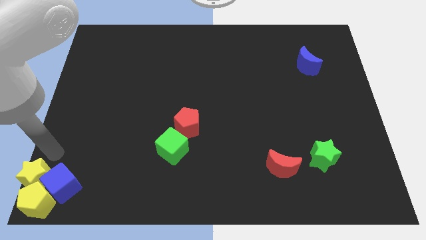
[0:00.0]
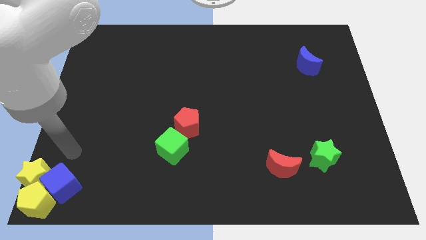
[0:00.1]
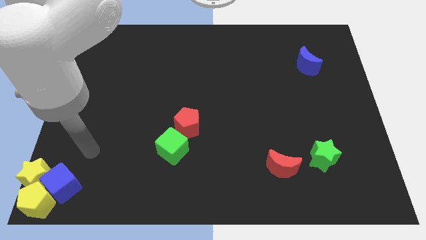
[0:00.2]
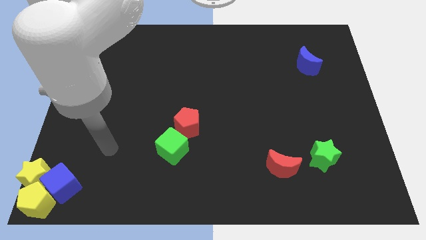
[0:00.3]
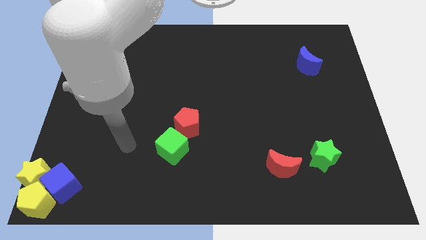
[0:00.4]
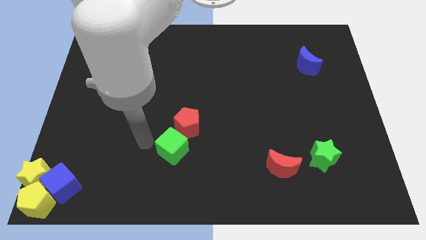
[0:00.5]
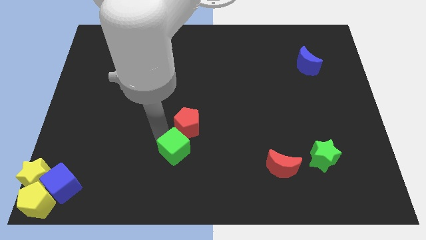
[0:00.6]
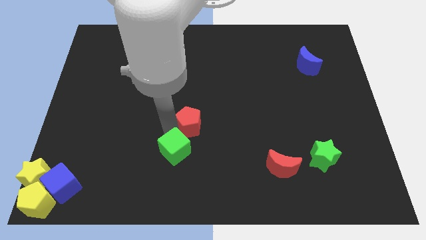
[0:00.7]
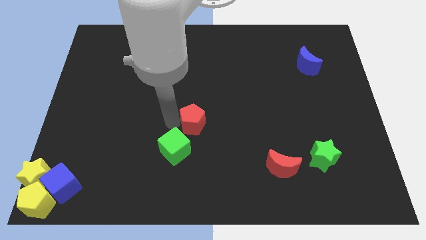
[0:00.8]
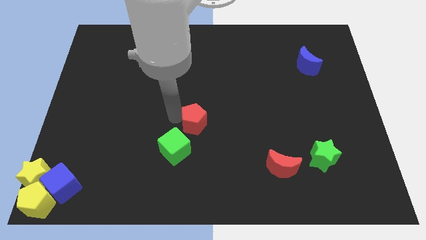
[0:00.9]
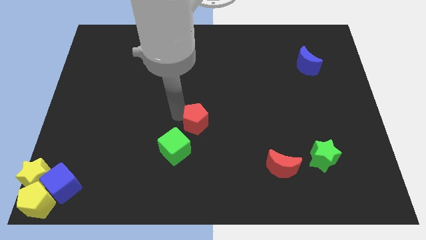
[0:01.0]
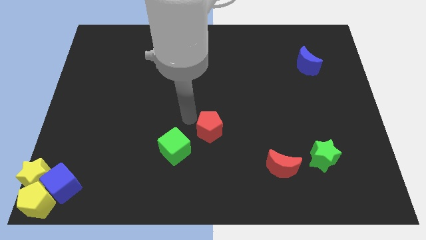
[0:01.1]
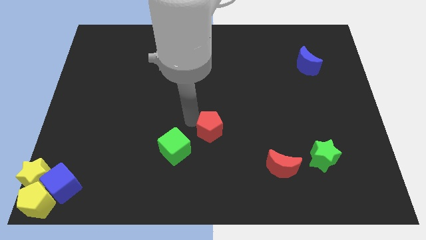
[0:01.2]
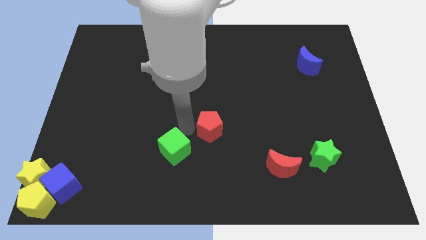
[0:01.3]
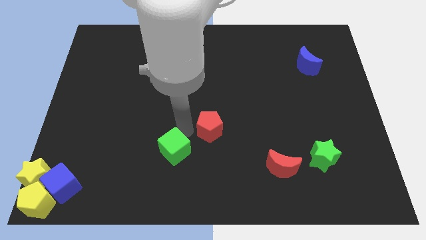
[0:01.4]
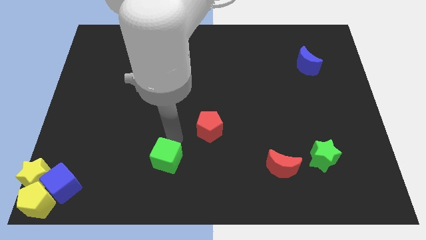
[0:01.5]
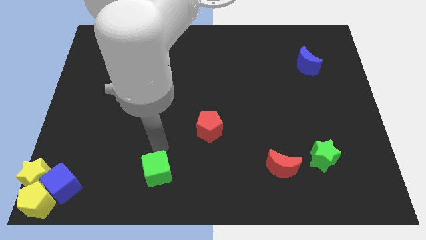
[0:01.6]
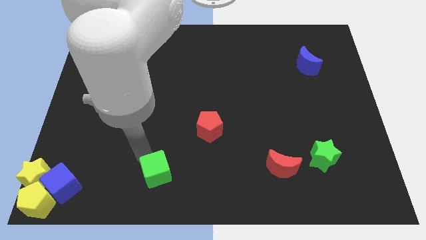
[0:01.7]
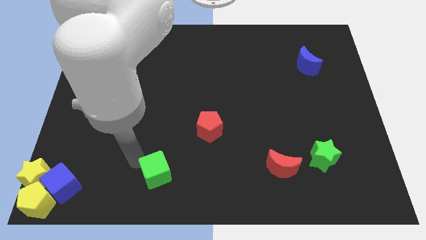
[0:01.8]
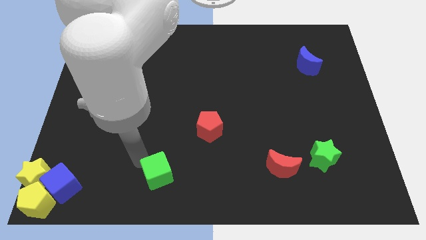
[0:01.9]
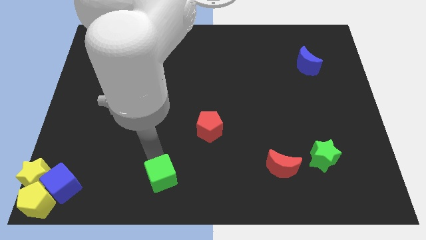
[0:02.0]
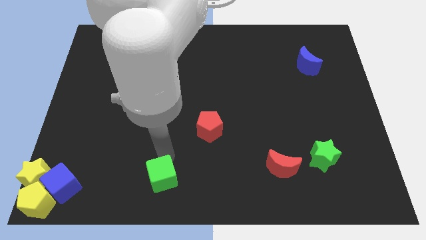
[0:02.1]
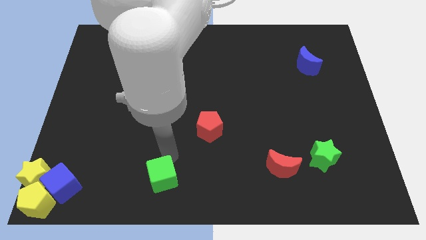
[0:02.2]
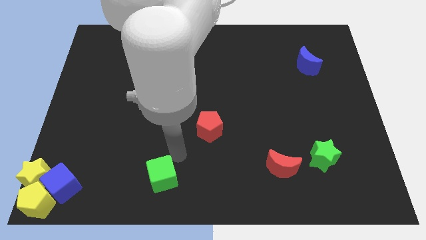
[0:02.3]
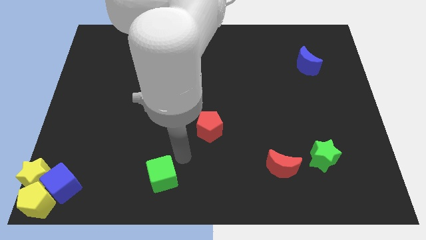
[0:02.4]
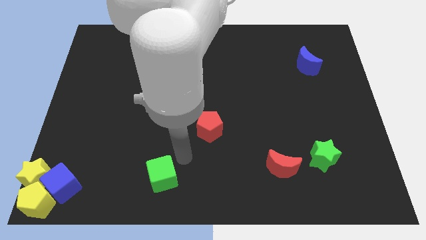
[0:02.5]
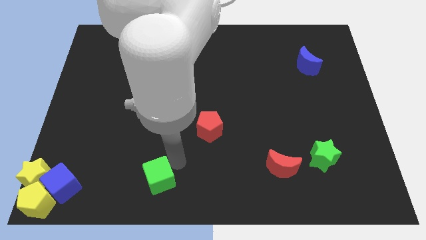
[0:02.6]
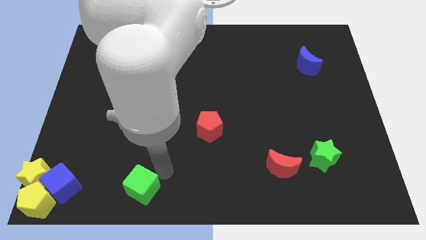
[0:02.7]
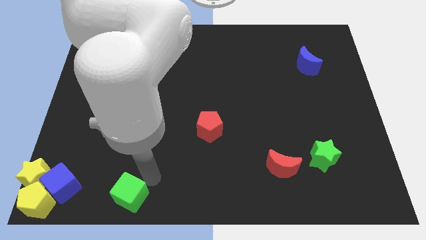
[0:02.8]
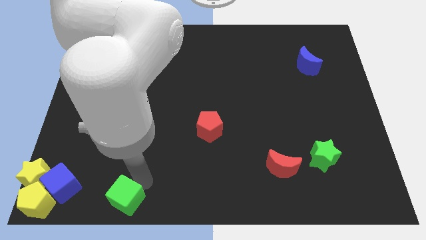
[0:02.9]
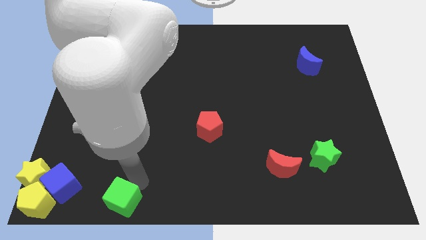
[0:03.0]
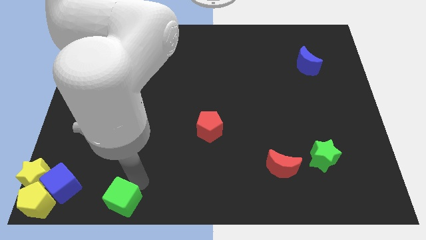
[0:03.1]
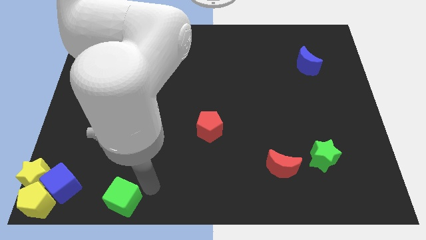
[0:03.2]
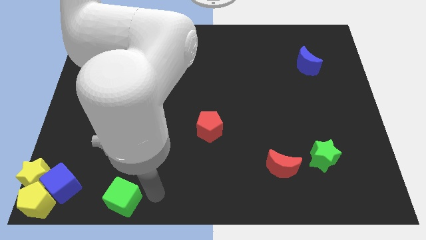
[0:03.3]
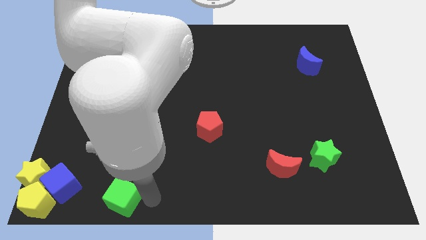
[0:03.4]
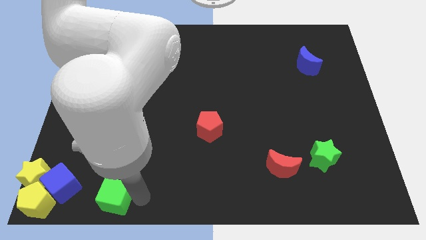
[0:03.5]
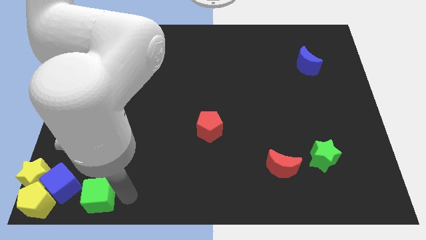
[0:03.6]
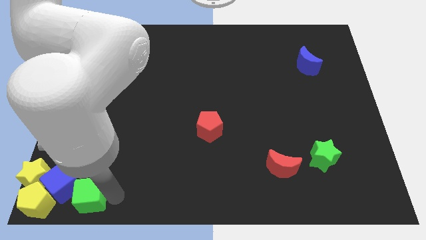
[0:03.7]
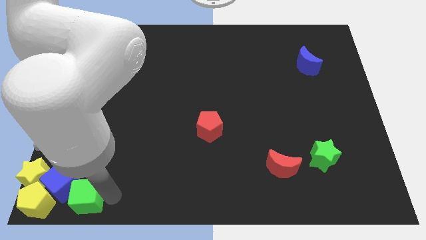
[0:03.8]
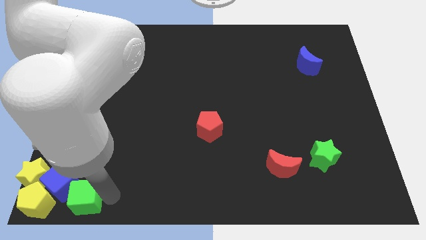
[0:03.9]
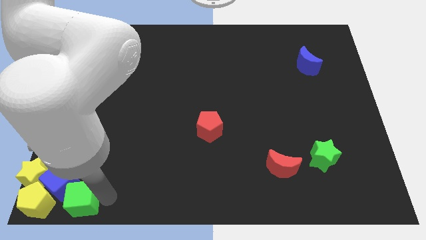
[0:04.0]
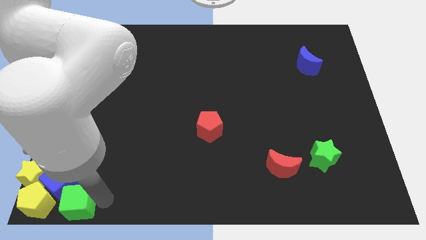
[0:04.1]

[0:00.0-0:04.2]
move the green cube into the group of blocks at the left bottom

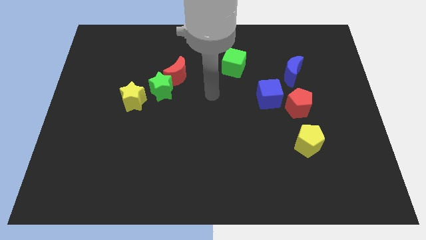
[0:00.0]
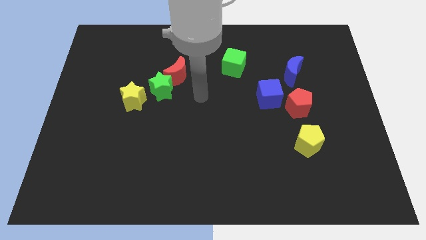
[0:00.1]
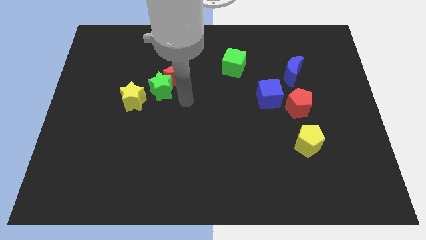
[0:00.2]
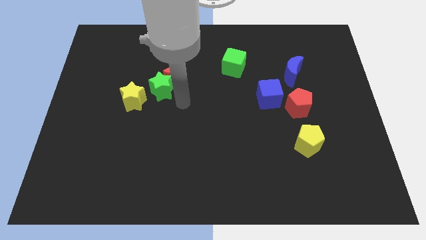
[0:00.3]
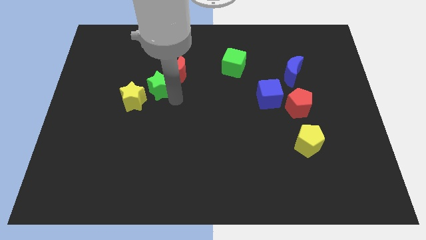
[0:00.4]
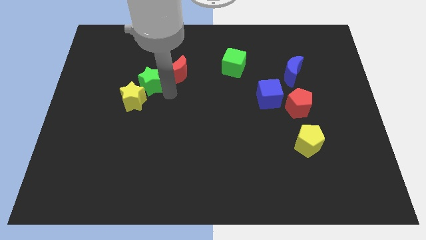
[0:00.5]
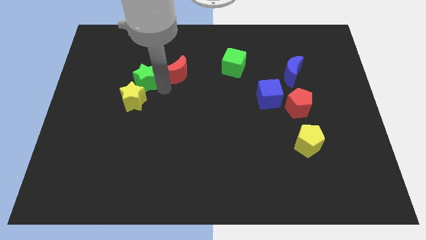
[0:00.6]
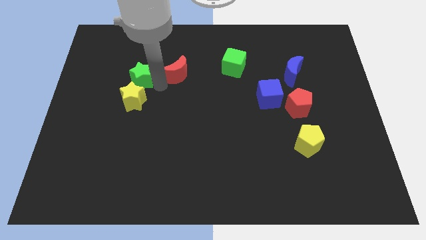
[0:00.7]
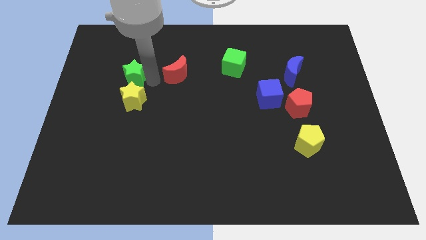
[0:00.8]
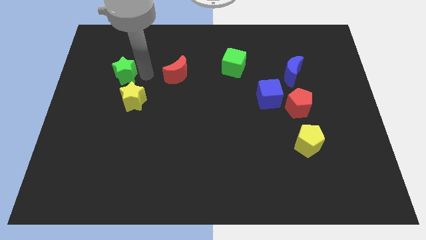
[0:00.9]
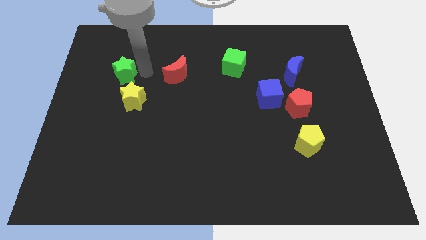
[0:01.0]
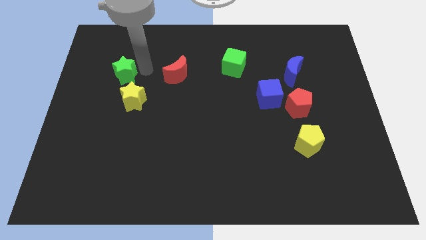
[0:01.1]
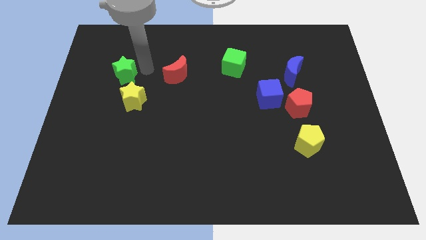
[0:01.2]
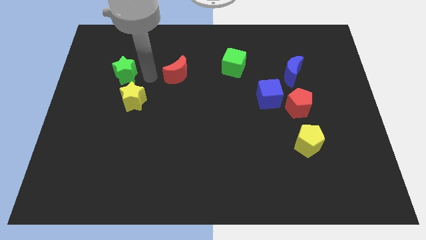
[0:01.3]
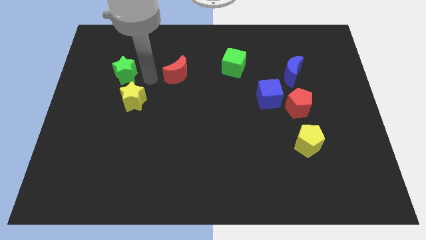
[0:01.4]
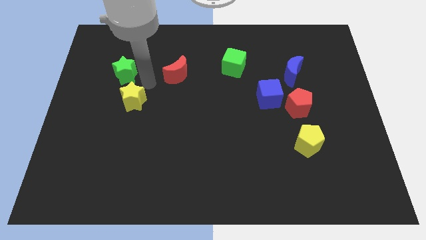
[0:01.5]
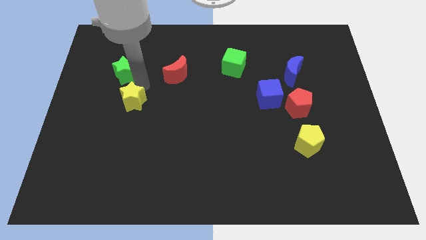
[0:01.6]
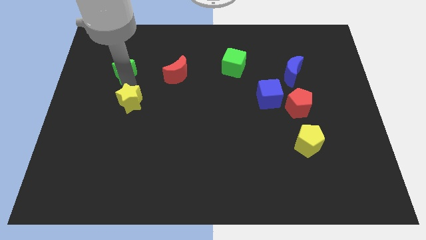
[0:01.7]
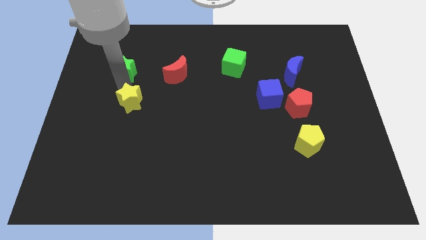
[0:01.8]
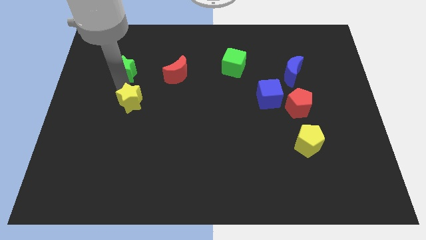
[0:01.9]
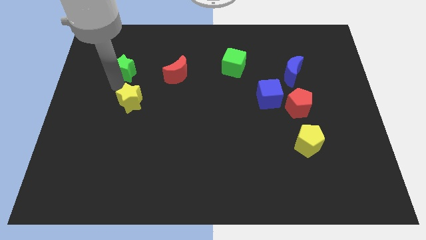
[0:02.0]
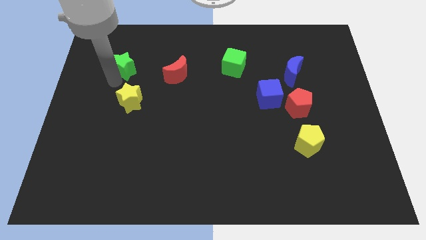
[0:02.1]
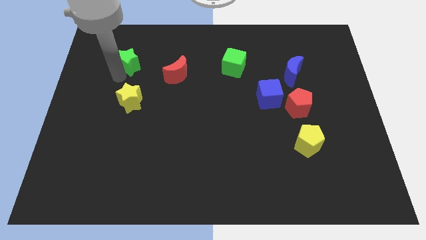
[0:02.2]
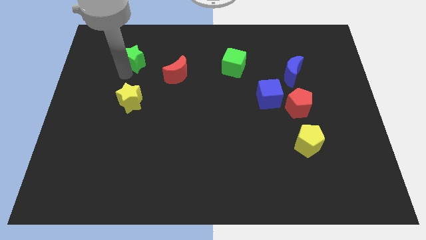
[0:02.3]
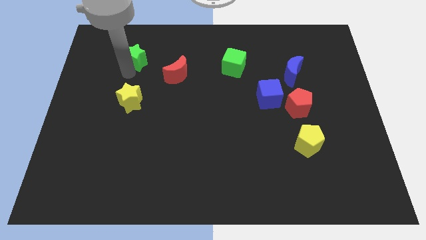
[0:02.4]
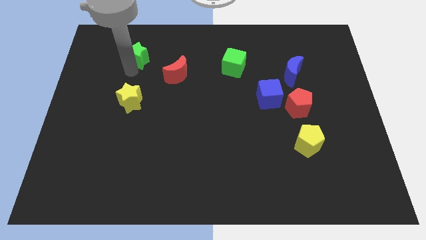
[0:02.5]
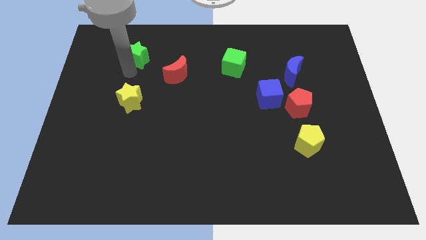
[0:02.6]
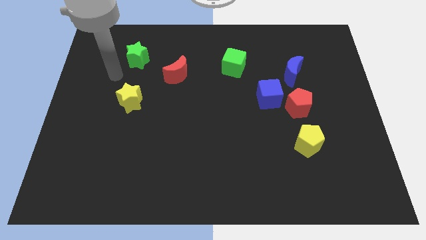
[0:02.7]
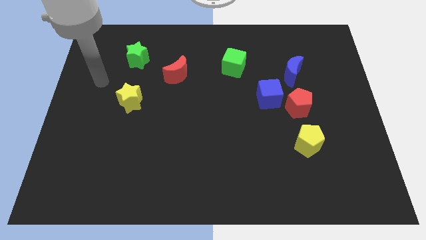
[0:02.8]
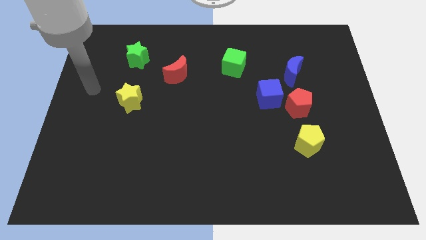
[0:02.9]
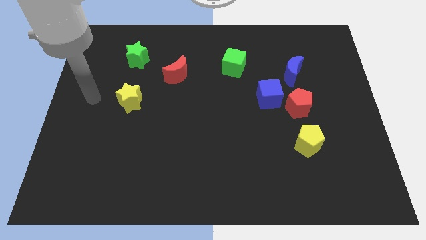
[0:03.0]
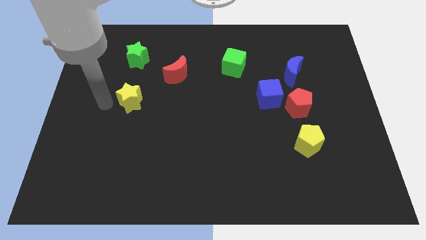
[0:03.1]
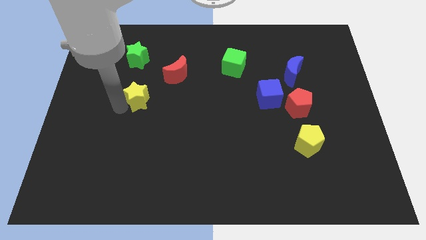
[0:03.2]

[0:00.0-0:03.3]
separate green star from red crescent

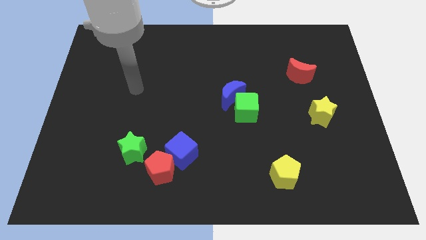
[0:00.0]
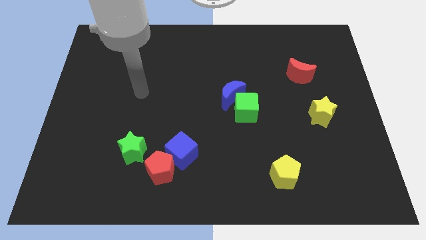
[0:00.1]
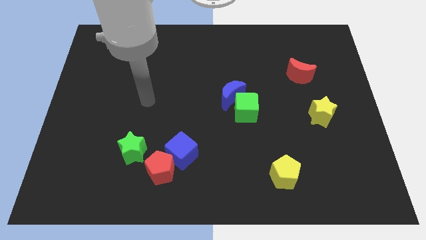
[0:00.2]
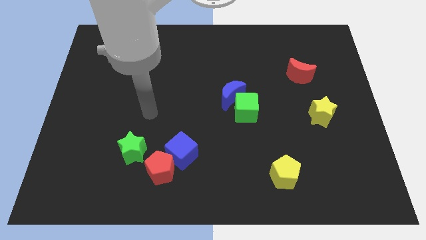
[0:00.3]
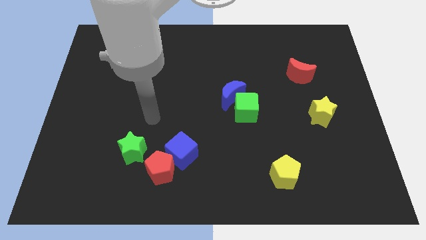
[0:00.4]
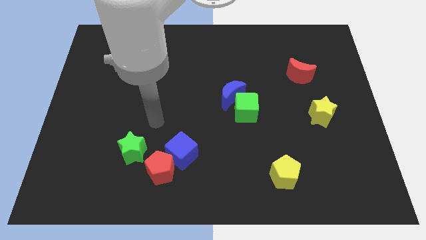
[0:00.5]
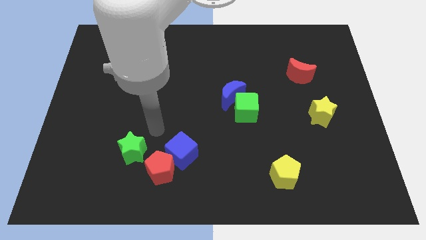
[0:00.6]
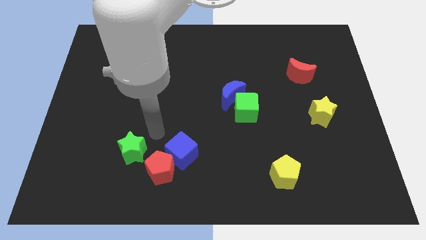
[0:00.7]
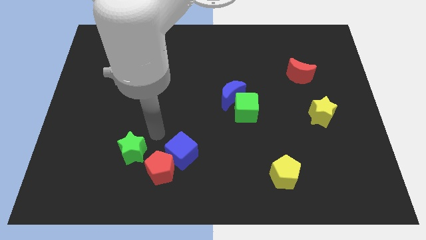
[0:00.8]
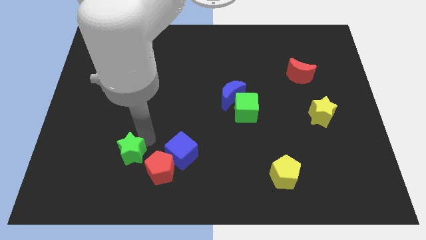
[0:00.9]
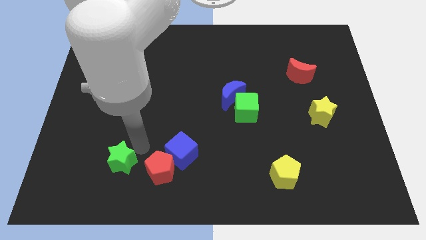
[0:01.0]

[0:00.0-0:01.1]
slightly push the green star to the bottom

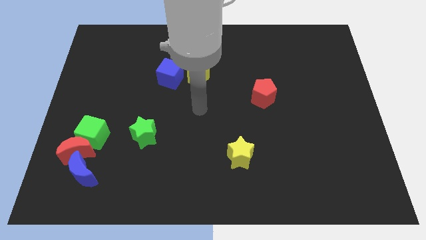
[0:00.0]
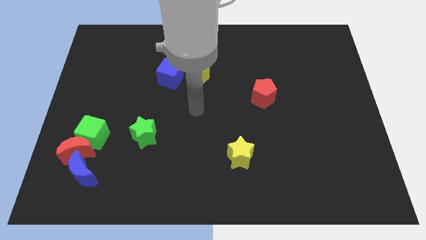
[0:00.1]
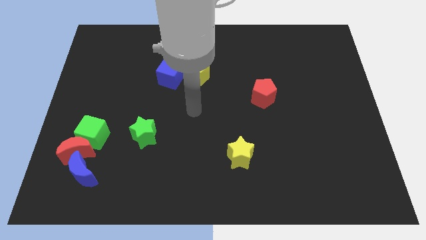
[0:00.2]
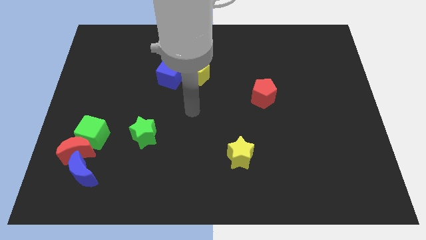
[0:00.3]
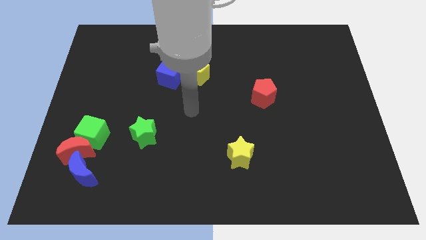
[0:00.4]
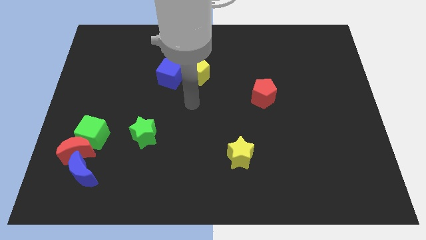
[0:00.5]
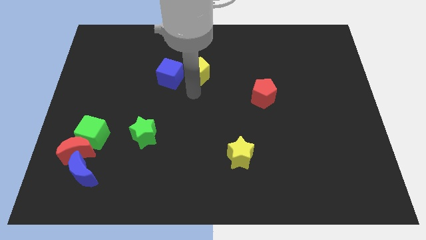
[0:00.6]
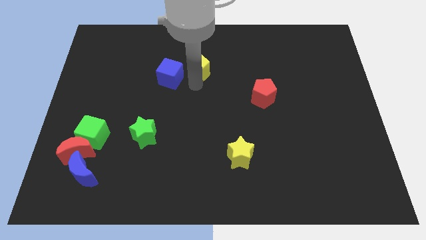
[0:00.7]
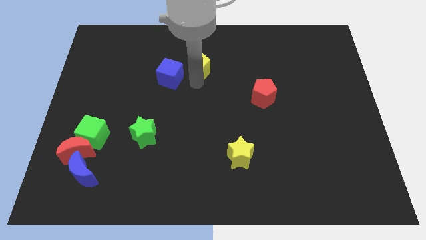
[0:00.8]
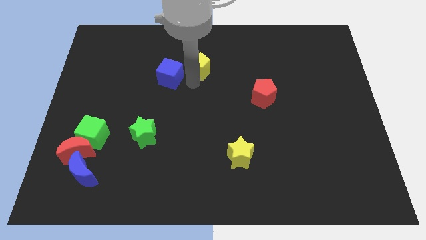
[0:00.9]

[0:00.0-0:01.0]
slightly push the yellow pentagon to the top
